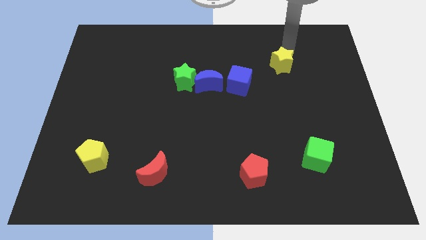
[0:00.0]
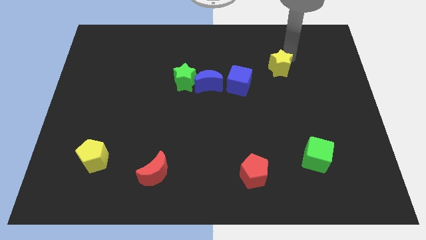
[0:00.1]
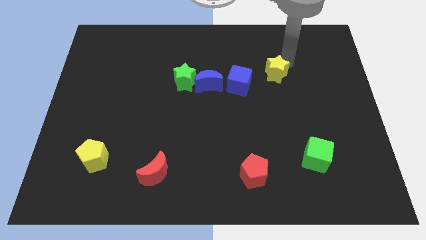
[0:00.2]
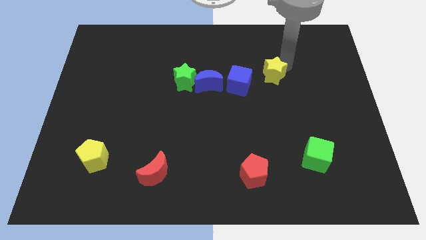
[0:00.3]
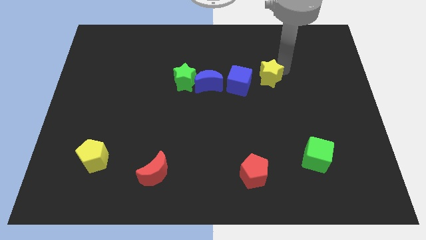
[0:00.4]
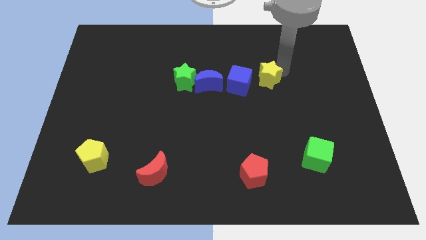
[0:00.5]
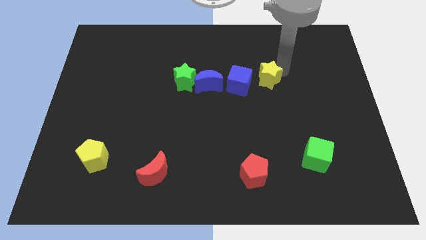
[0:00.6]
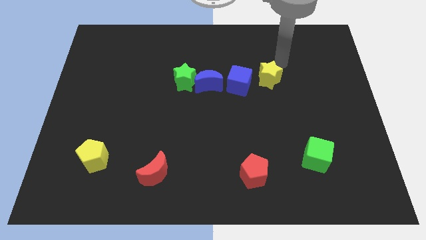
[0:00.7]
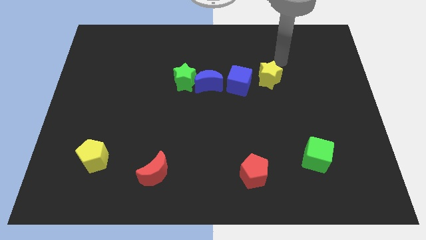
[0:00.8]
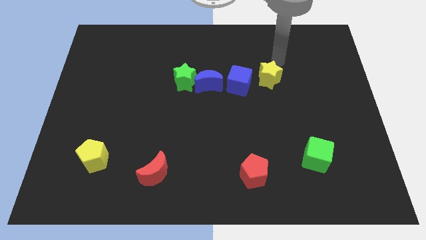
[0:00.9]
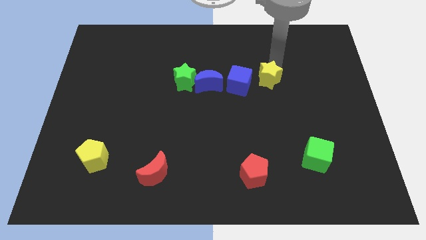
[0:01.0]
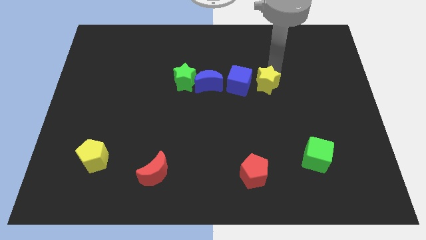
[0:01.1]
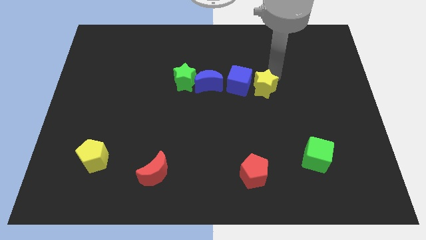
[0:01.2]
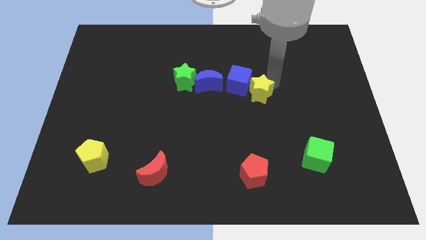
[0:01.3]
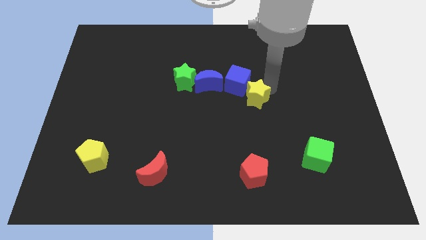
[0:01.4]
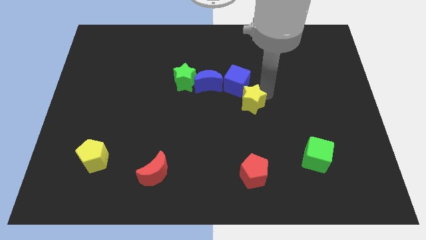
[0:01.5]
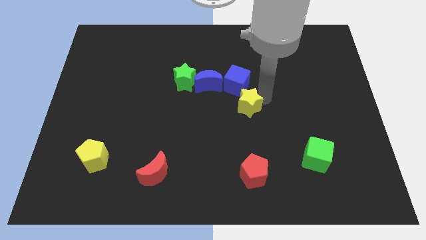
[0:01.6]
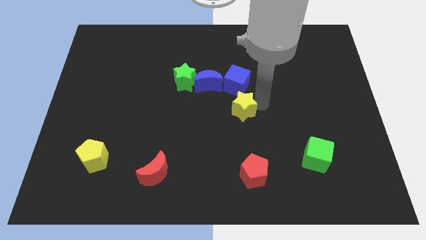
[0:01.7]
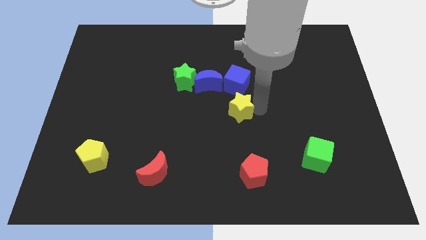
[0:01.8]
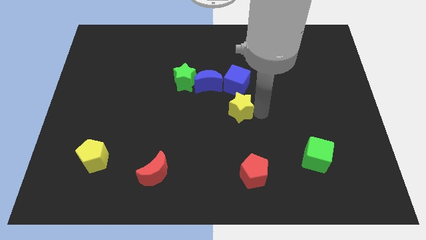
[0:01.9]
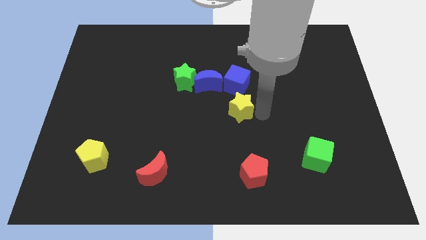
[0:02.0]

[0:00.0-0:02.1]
place the yellow star below the blue cube

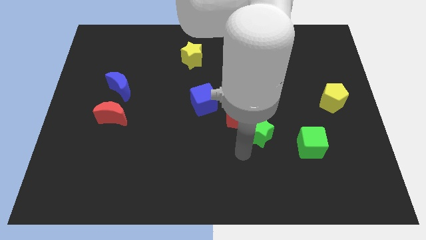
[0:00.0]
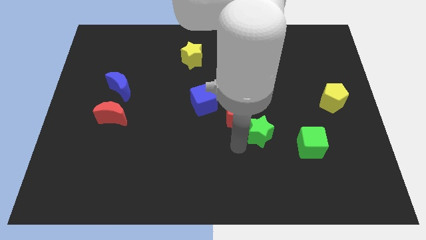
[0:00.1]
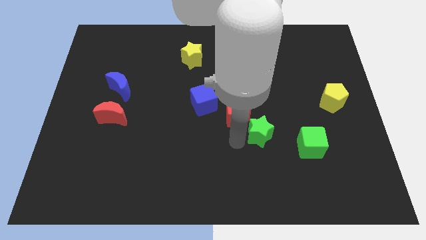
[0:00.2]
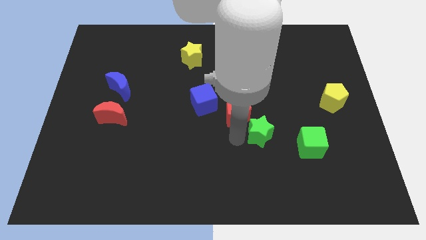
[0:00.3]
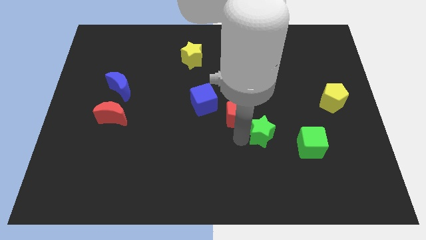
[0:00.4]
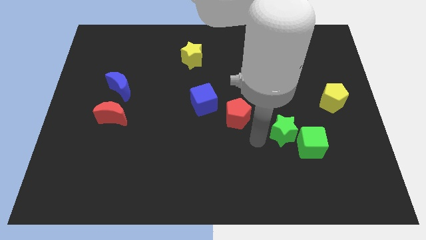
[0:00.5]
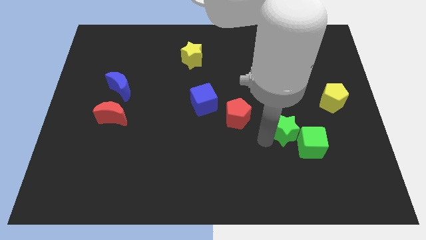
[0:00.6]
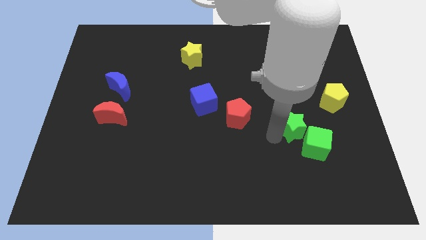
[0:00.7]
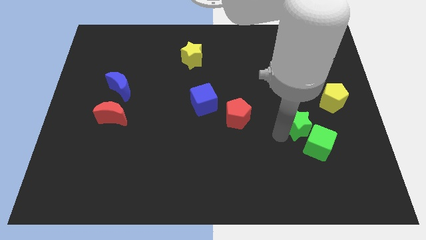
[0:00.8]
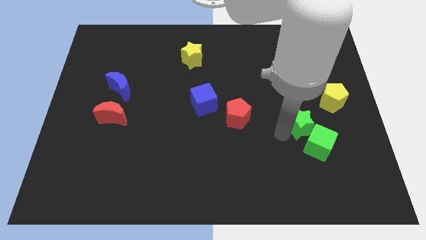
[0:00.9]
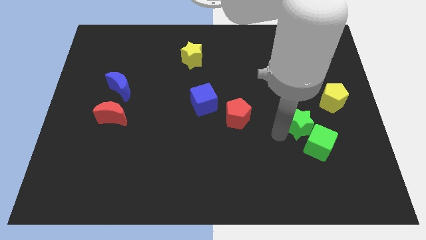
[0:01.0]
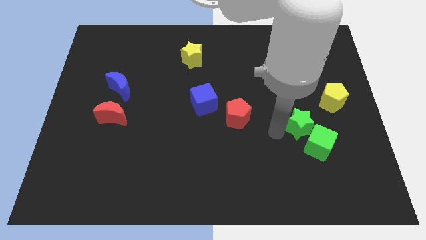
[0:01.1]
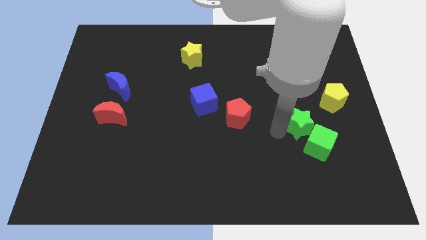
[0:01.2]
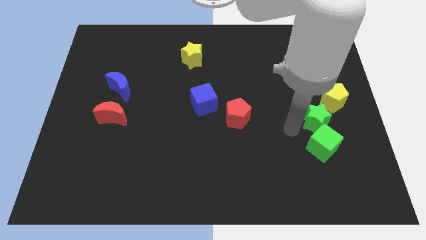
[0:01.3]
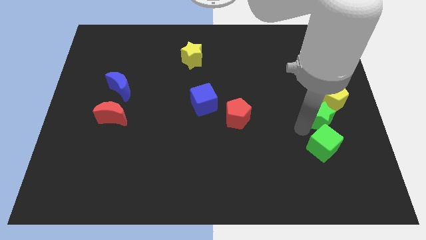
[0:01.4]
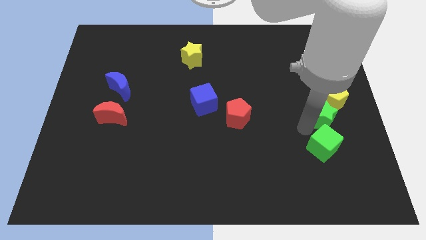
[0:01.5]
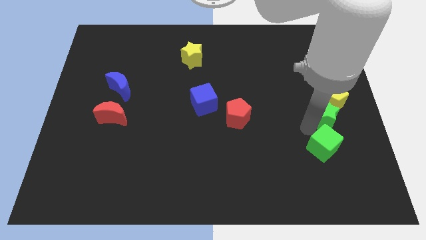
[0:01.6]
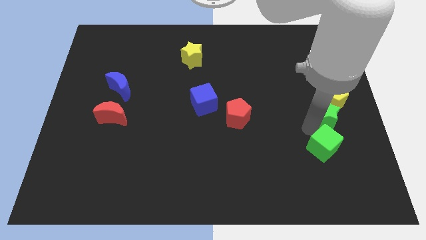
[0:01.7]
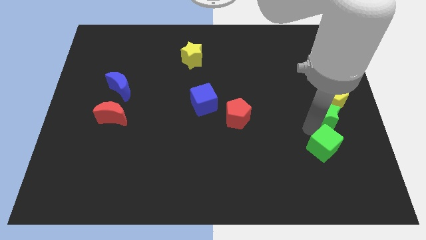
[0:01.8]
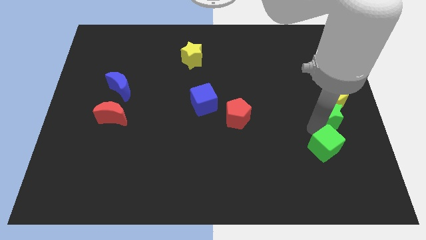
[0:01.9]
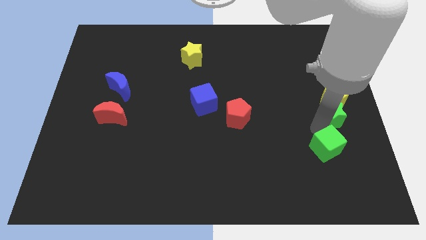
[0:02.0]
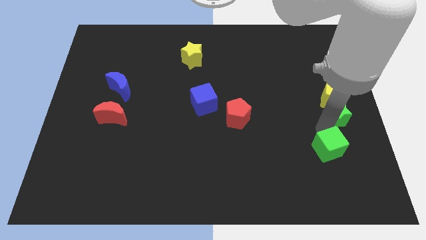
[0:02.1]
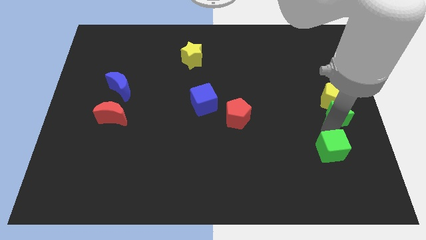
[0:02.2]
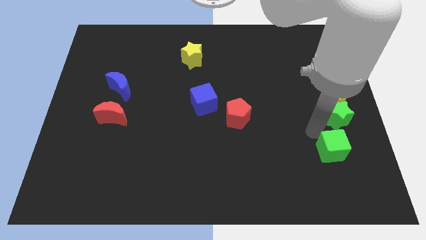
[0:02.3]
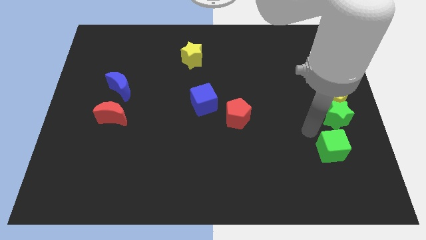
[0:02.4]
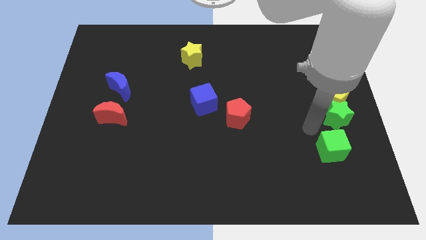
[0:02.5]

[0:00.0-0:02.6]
put the greens star below yellow pentagon

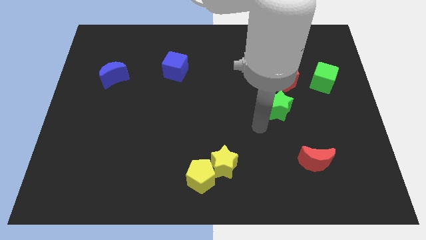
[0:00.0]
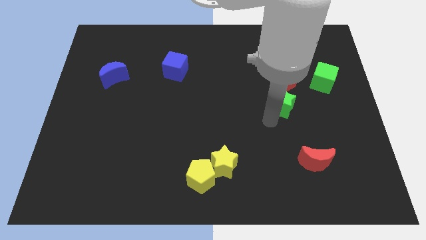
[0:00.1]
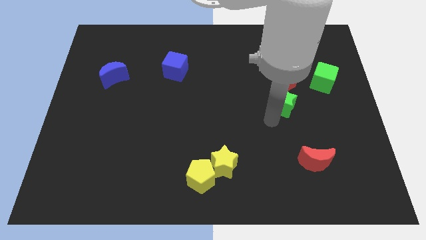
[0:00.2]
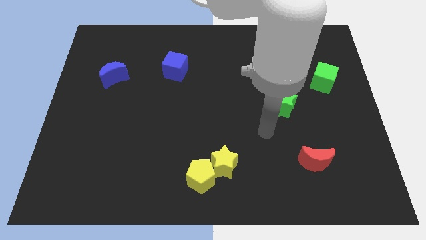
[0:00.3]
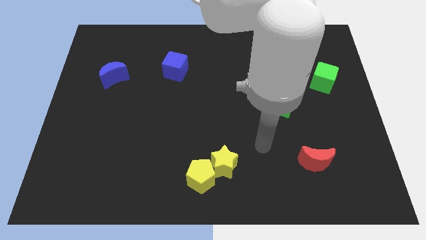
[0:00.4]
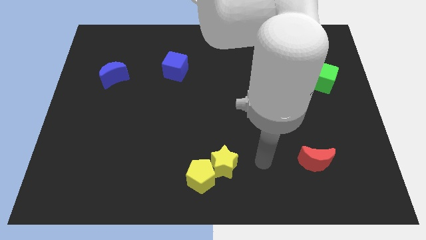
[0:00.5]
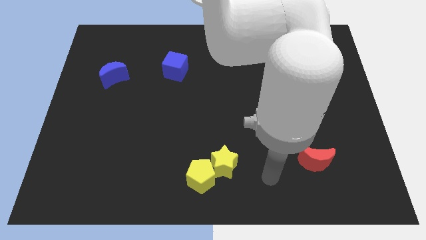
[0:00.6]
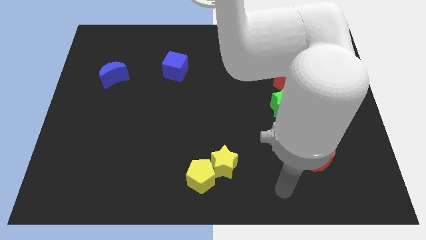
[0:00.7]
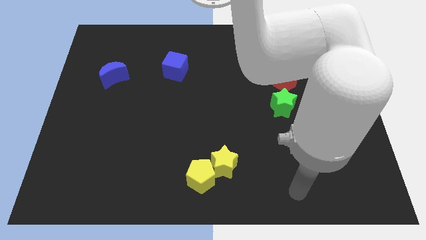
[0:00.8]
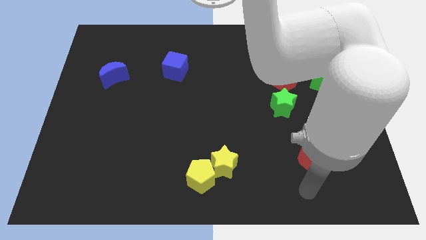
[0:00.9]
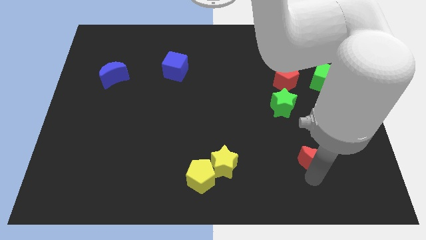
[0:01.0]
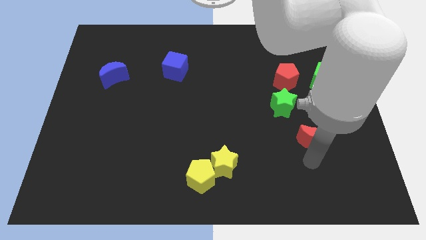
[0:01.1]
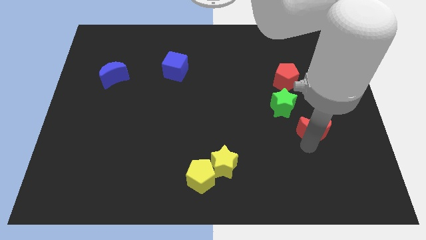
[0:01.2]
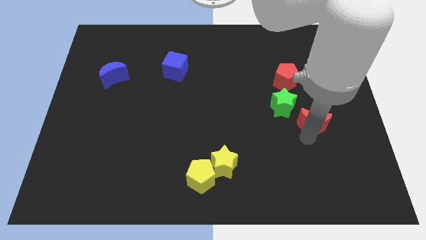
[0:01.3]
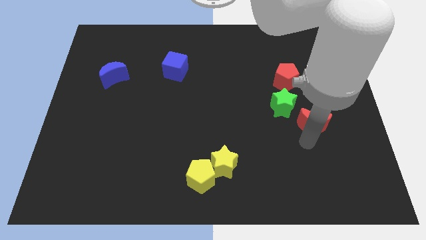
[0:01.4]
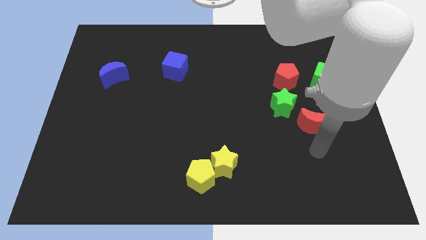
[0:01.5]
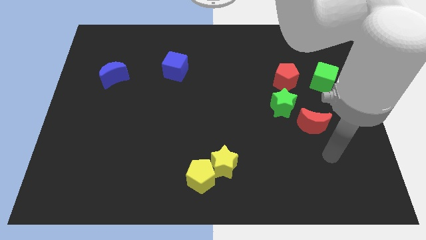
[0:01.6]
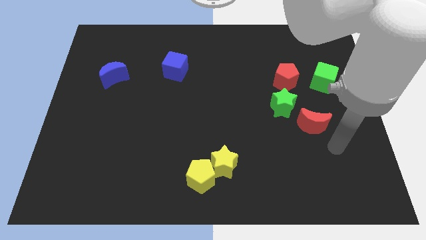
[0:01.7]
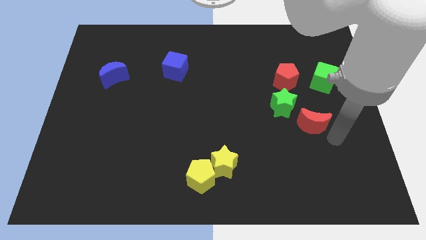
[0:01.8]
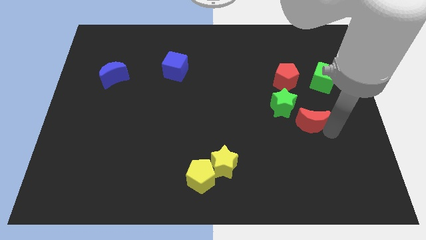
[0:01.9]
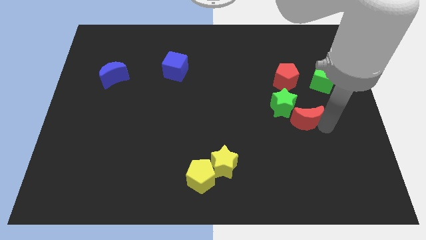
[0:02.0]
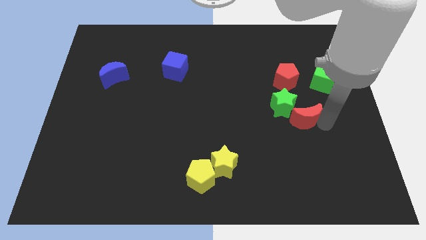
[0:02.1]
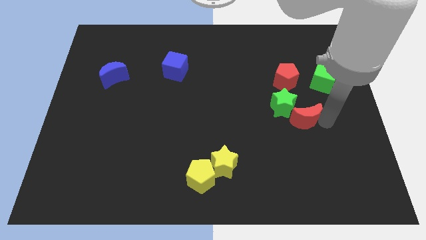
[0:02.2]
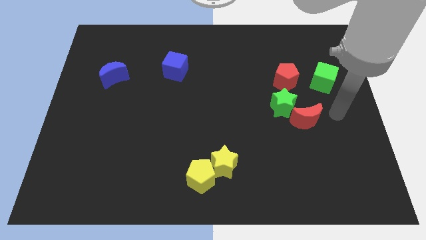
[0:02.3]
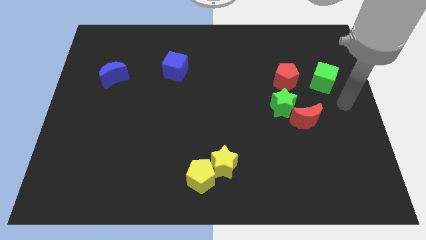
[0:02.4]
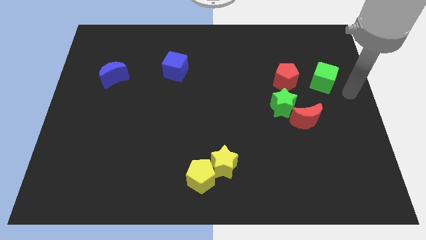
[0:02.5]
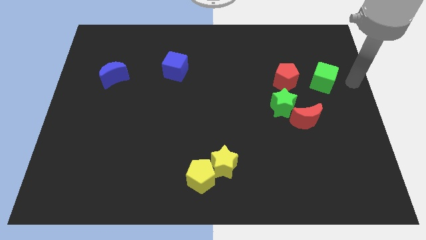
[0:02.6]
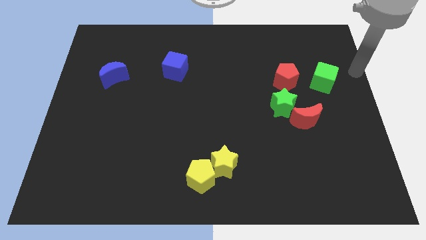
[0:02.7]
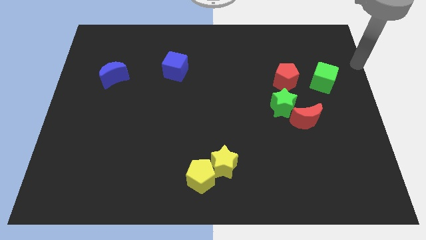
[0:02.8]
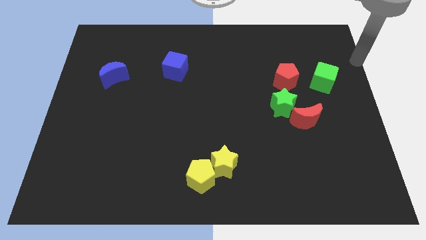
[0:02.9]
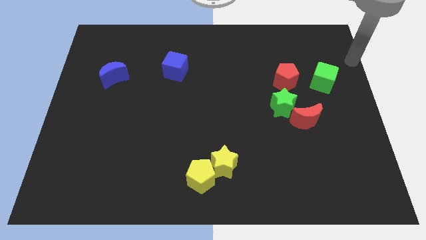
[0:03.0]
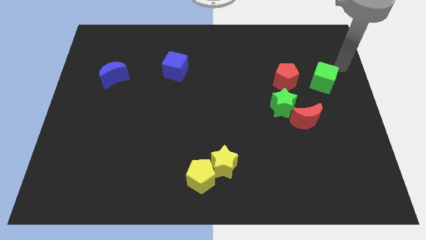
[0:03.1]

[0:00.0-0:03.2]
move the red crescent towards the center right

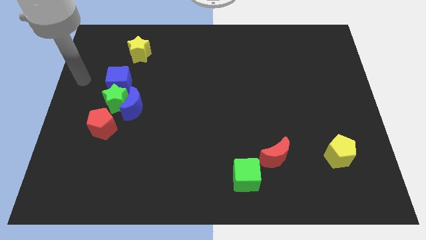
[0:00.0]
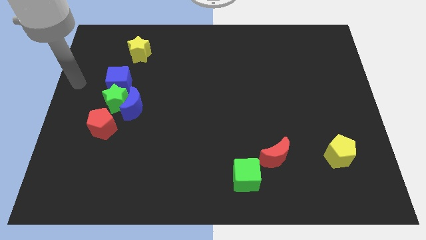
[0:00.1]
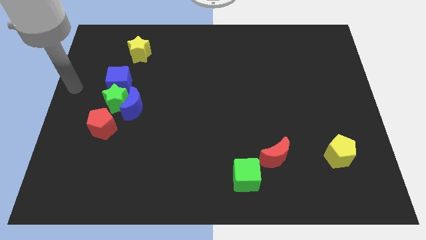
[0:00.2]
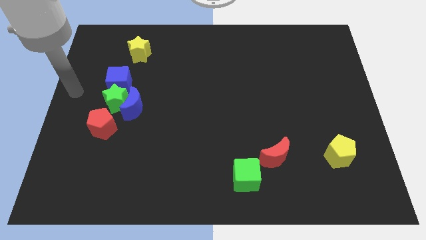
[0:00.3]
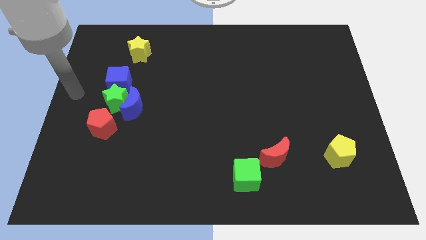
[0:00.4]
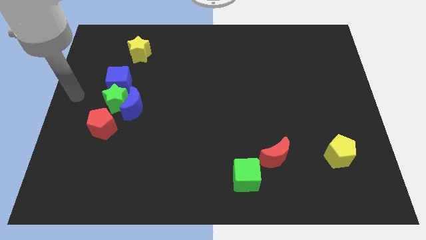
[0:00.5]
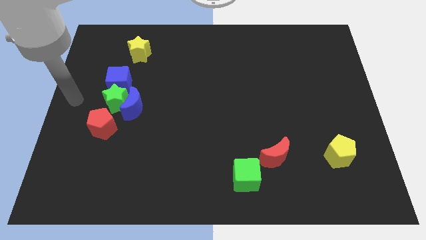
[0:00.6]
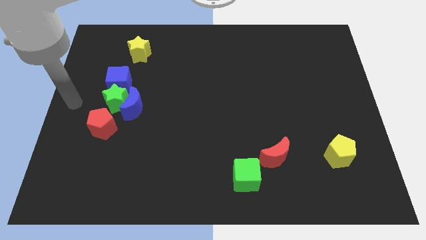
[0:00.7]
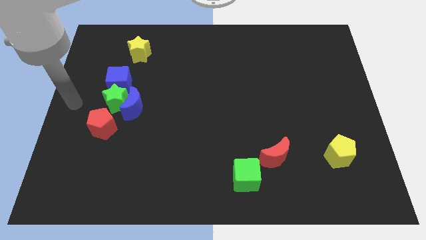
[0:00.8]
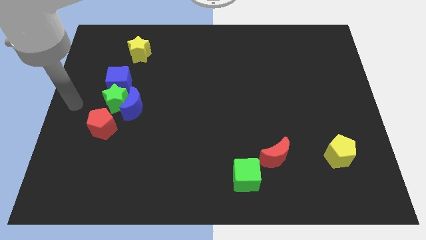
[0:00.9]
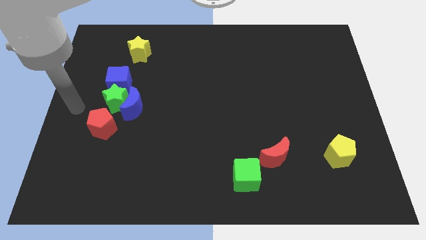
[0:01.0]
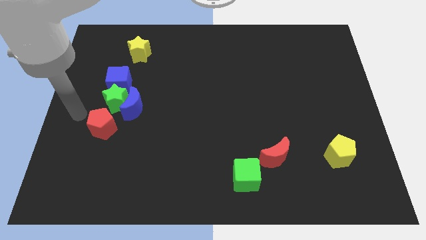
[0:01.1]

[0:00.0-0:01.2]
place your arm parallel to green star
